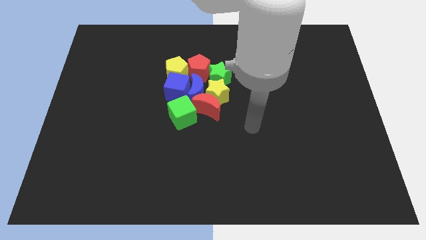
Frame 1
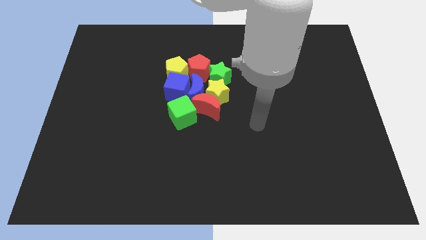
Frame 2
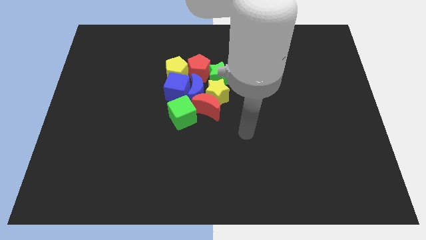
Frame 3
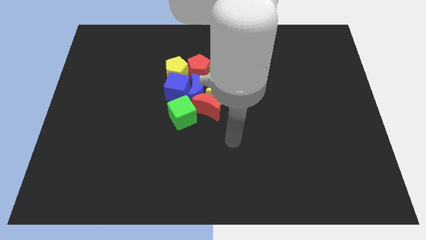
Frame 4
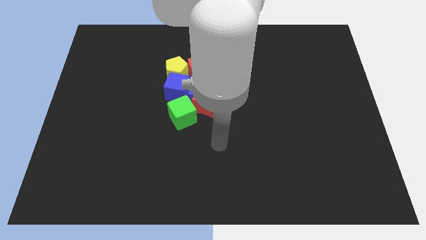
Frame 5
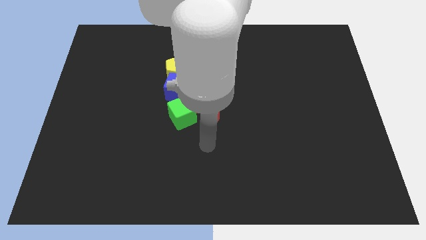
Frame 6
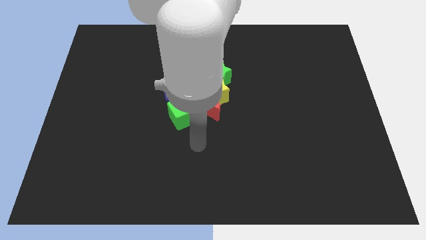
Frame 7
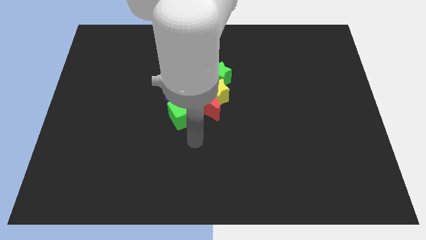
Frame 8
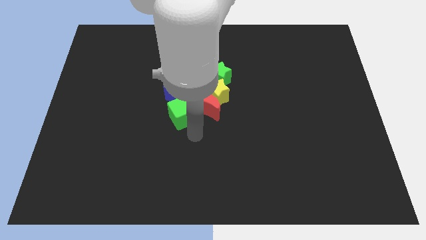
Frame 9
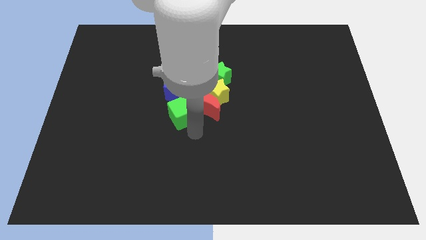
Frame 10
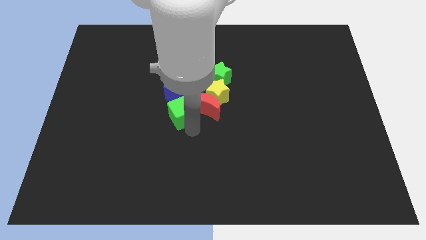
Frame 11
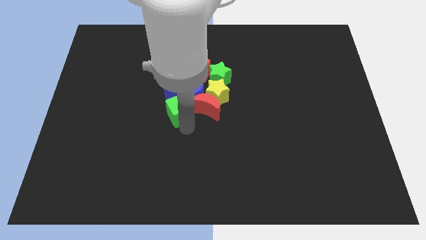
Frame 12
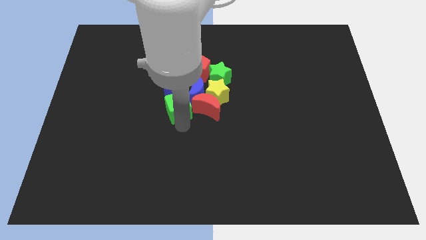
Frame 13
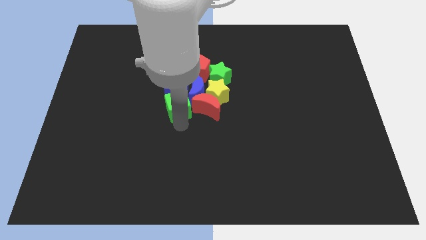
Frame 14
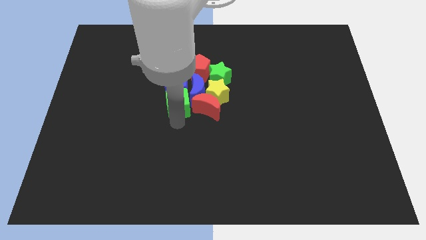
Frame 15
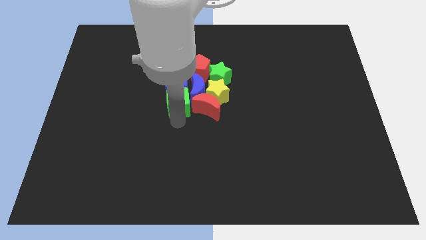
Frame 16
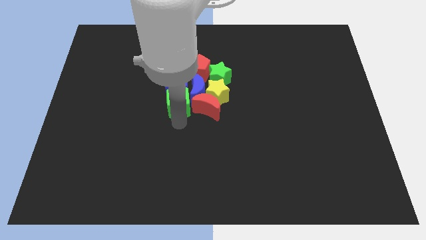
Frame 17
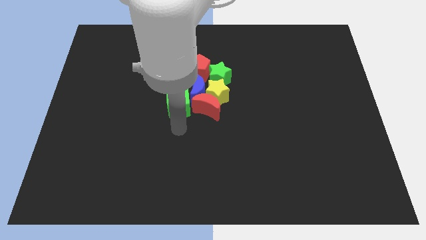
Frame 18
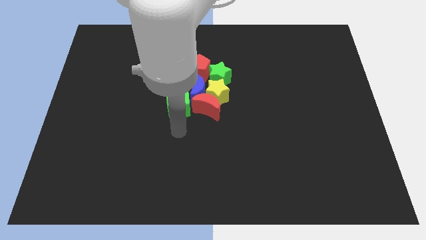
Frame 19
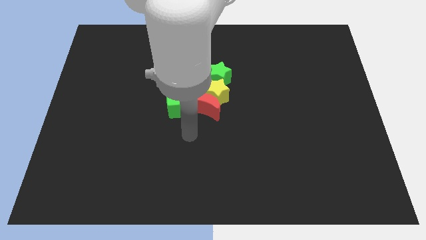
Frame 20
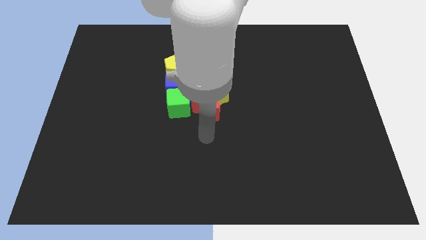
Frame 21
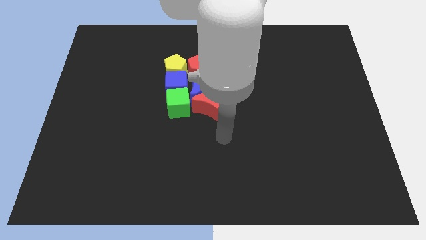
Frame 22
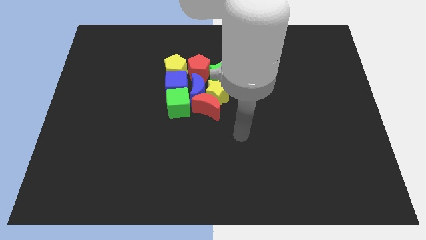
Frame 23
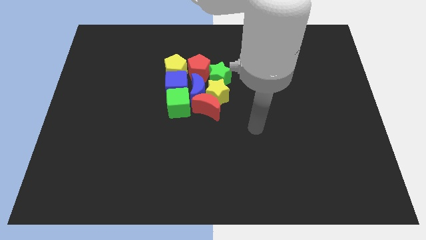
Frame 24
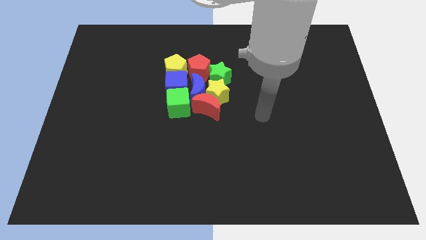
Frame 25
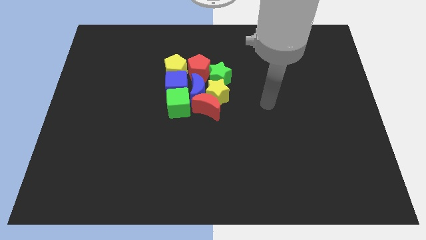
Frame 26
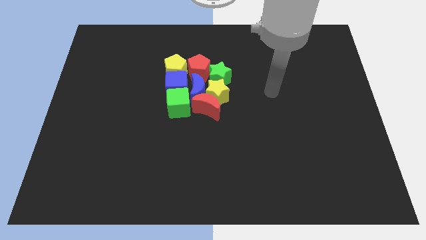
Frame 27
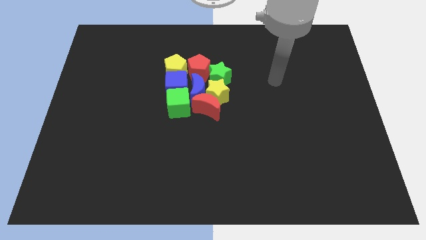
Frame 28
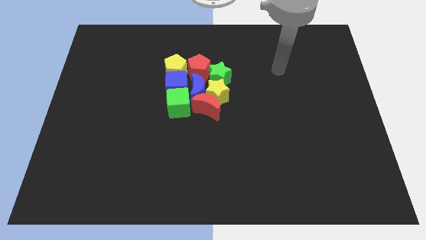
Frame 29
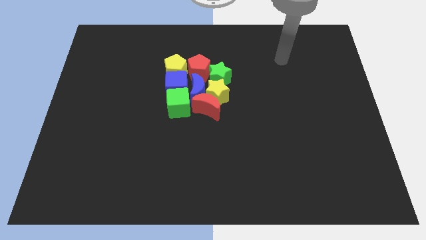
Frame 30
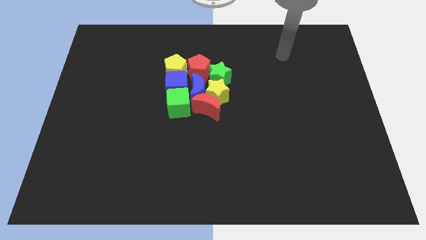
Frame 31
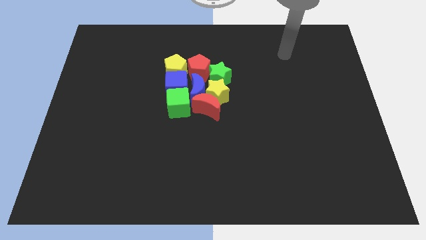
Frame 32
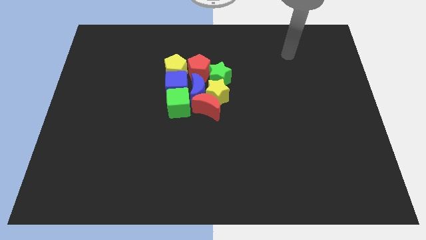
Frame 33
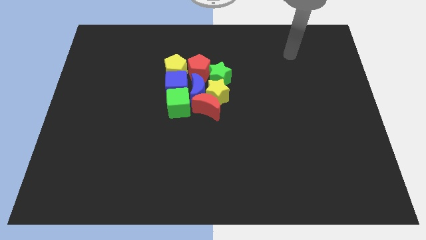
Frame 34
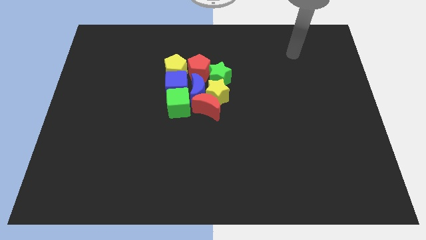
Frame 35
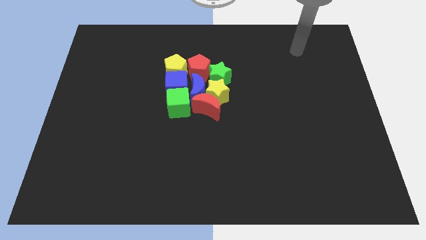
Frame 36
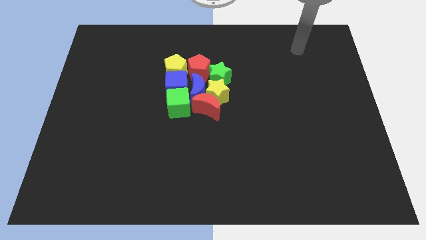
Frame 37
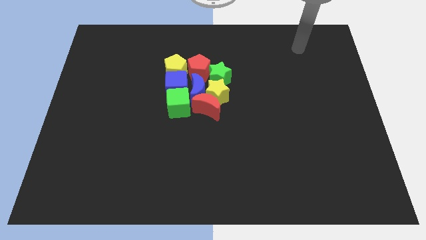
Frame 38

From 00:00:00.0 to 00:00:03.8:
move arm towards top right side of the board

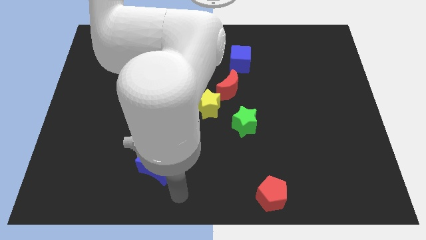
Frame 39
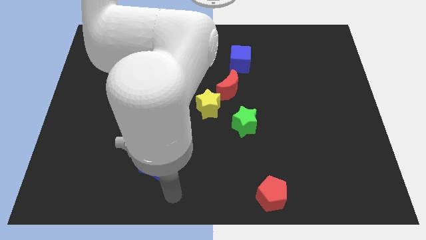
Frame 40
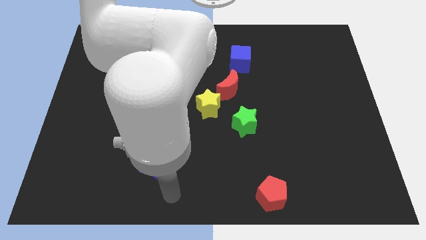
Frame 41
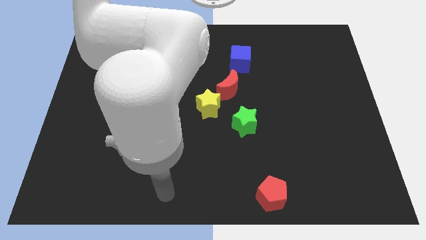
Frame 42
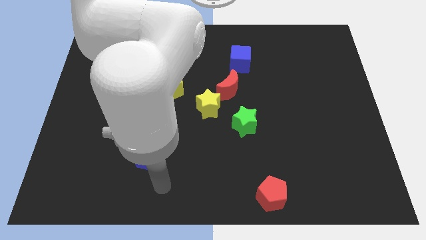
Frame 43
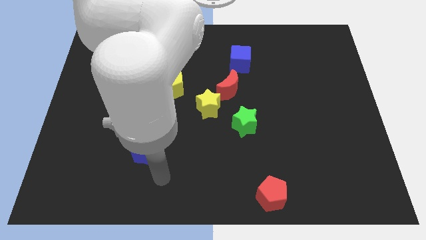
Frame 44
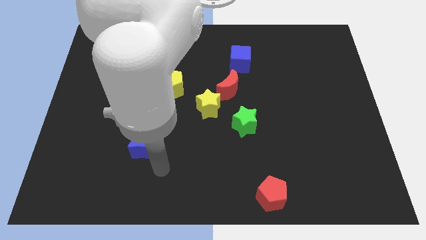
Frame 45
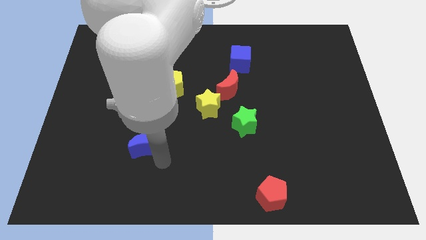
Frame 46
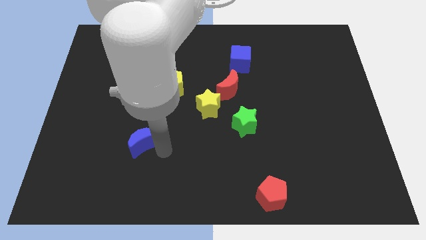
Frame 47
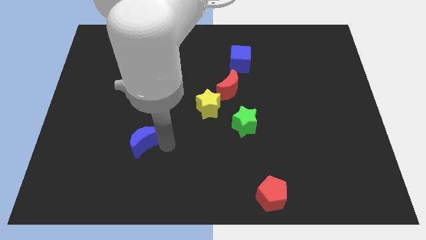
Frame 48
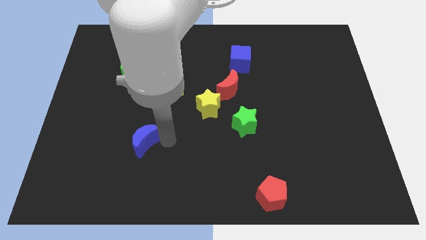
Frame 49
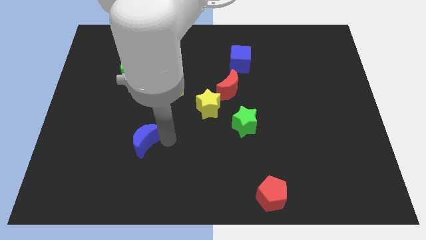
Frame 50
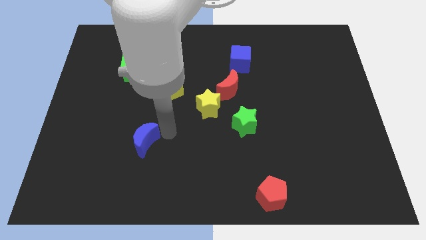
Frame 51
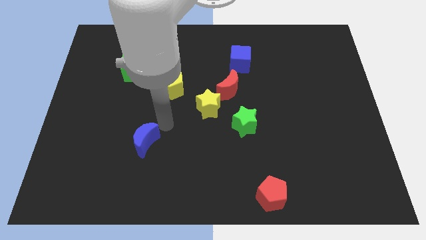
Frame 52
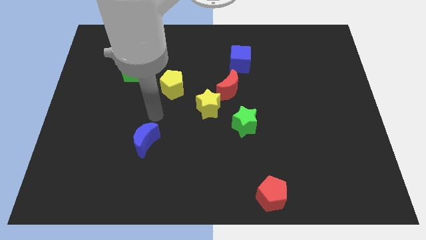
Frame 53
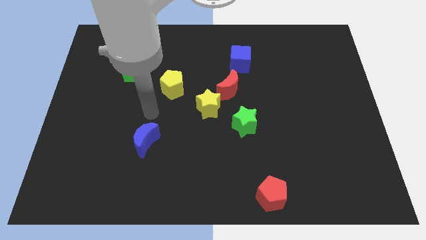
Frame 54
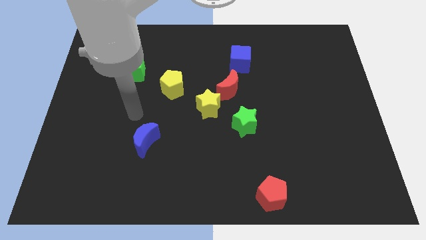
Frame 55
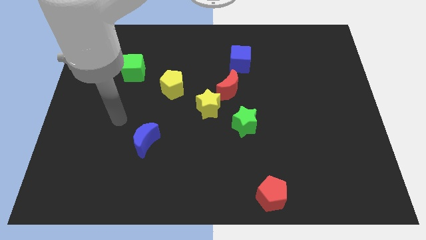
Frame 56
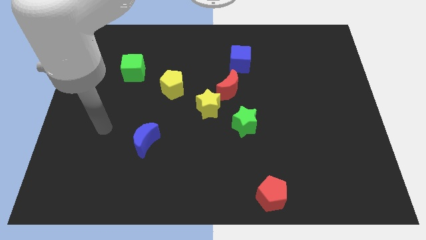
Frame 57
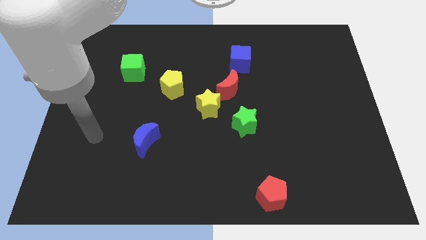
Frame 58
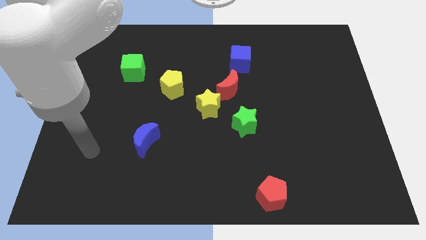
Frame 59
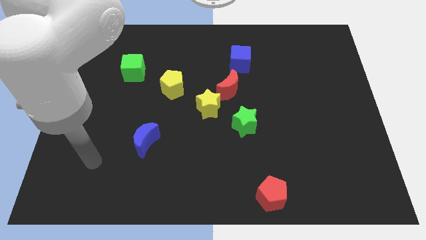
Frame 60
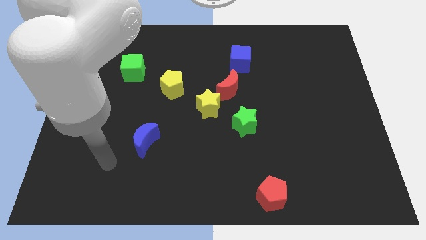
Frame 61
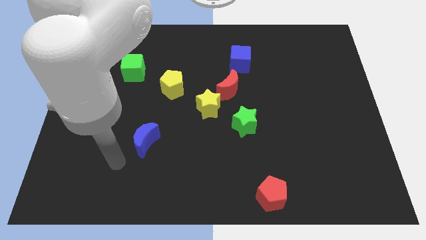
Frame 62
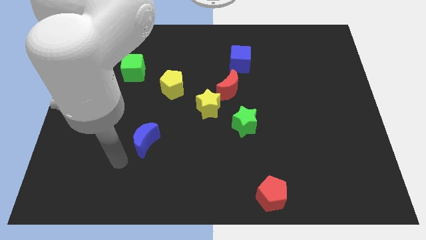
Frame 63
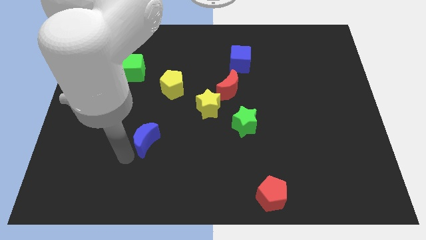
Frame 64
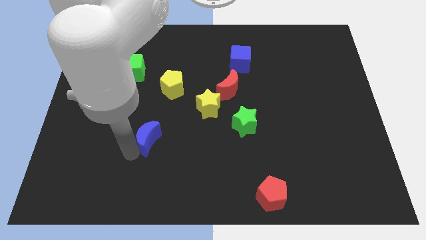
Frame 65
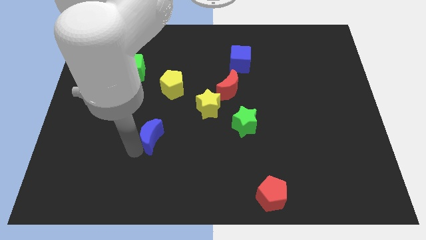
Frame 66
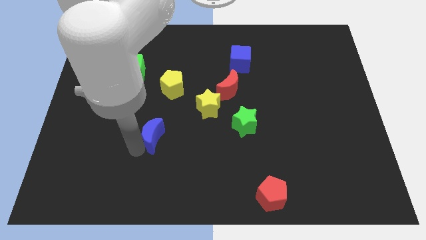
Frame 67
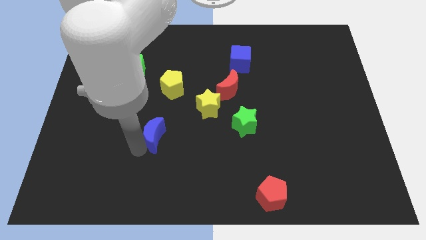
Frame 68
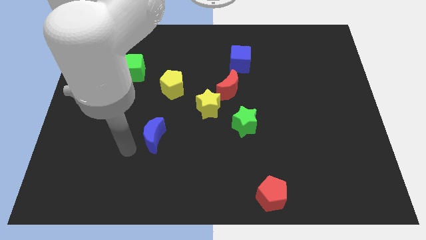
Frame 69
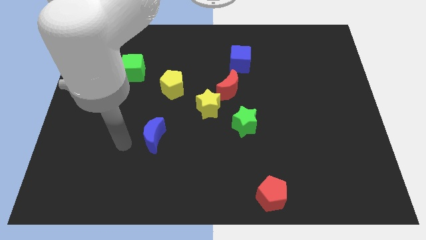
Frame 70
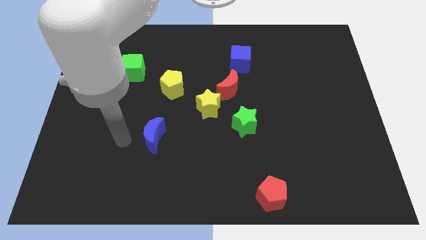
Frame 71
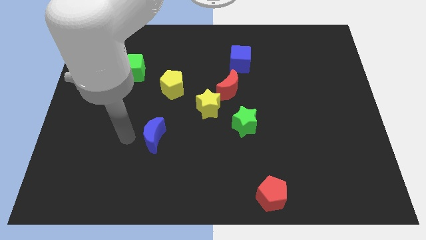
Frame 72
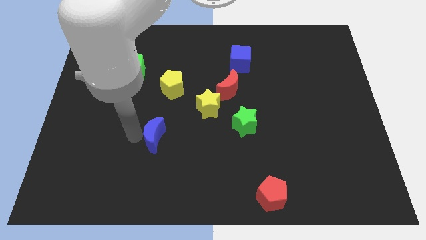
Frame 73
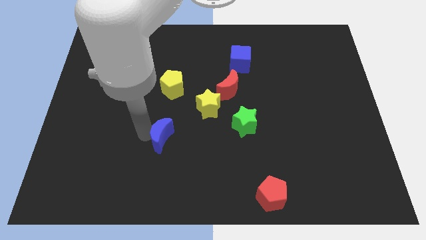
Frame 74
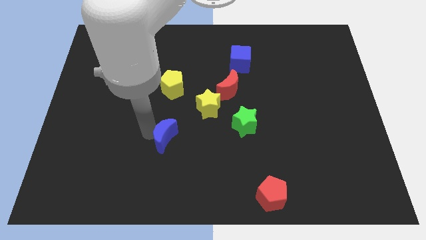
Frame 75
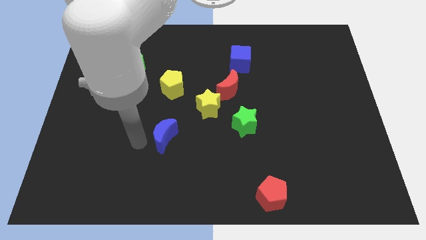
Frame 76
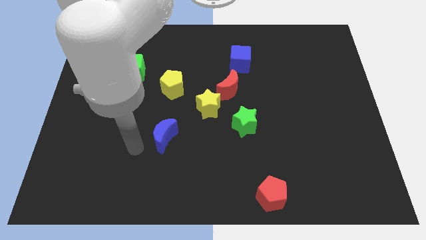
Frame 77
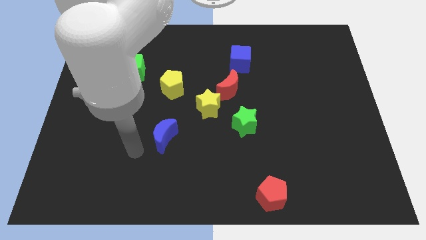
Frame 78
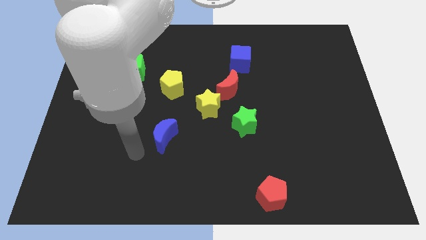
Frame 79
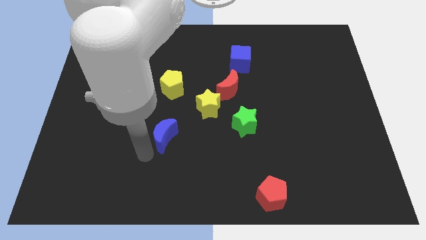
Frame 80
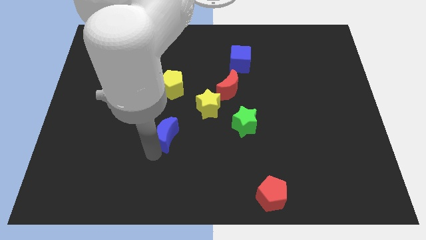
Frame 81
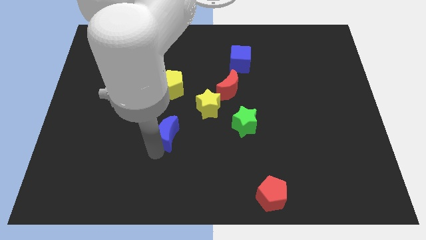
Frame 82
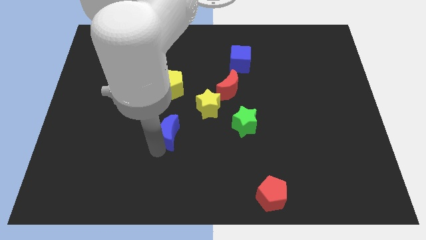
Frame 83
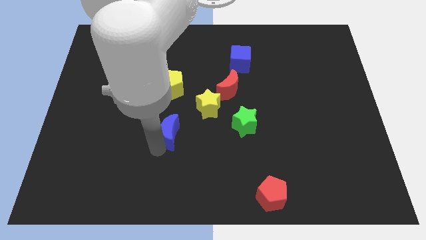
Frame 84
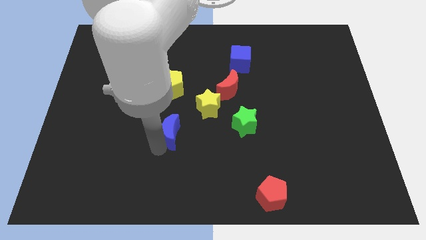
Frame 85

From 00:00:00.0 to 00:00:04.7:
move blue moon parallel to green star

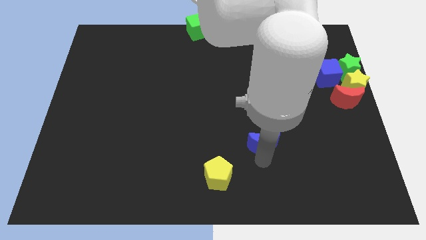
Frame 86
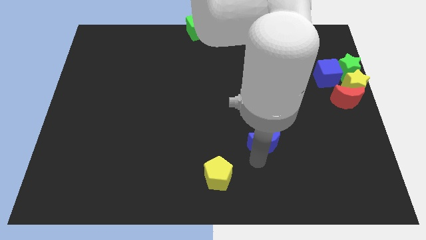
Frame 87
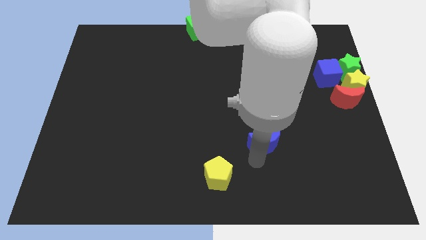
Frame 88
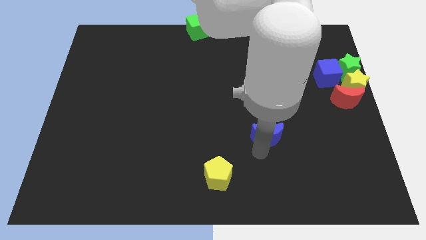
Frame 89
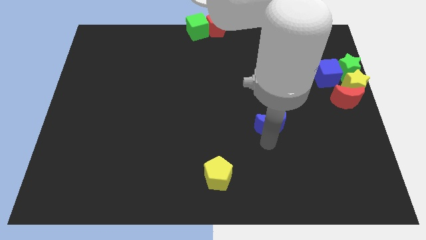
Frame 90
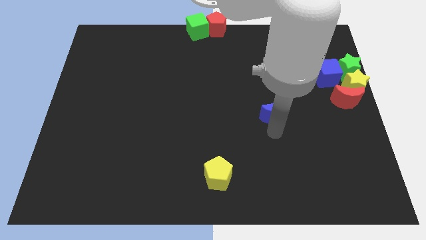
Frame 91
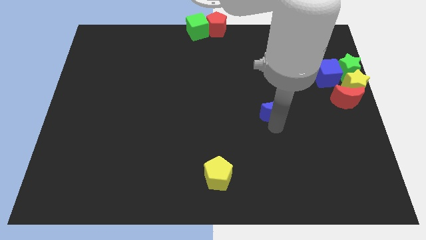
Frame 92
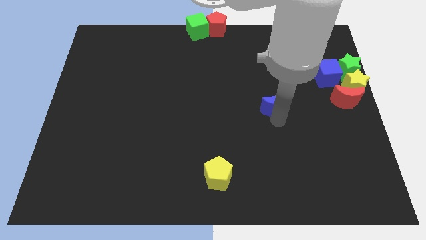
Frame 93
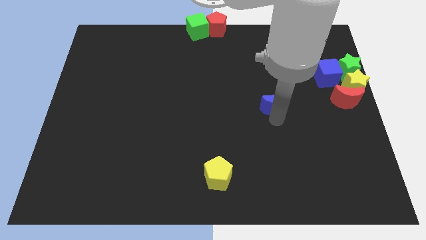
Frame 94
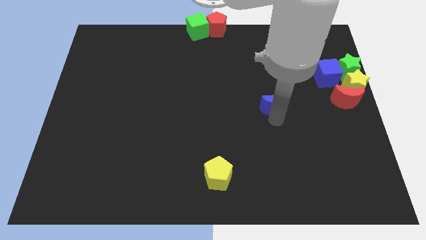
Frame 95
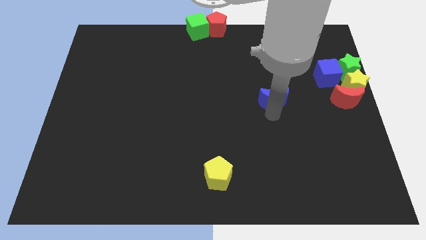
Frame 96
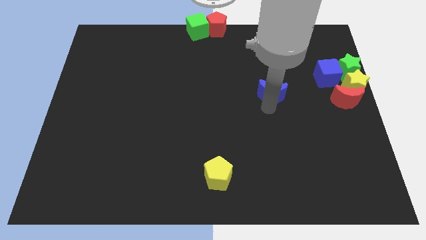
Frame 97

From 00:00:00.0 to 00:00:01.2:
place the blue crescent to the left of the red crescent
